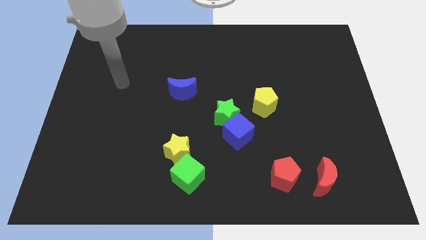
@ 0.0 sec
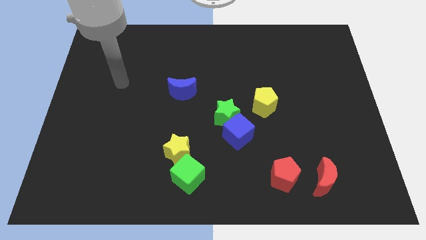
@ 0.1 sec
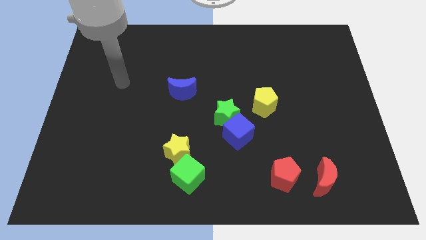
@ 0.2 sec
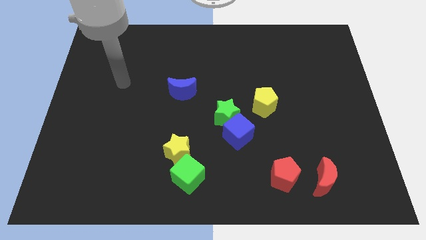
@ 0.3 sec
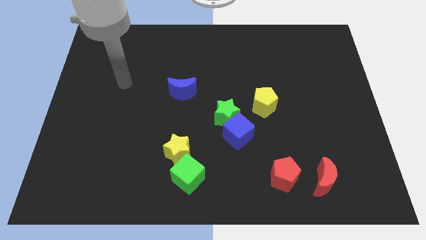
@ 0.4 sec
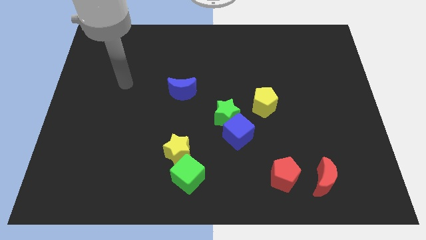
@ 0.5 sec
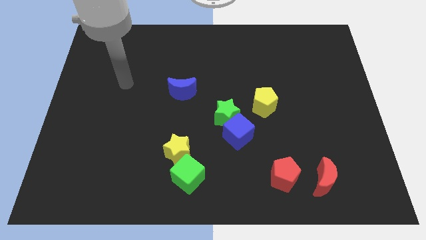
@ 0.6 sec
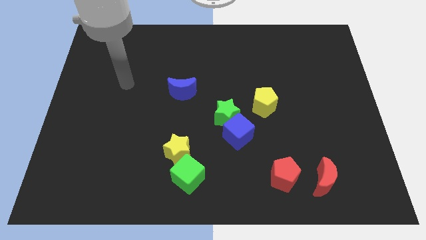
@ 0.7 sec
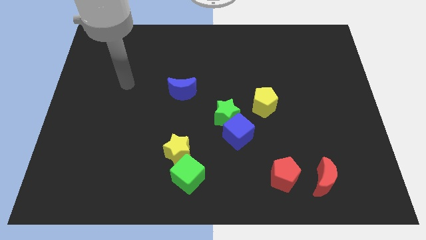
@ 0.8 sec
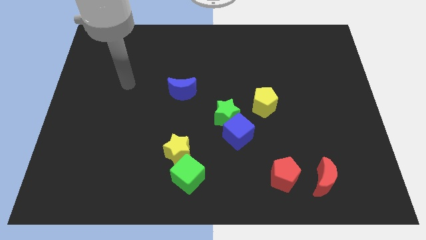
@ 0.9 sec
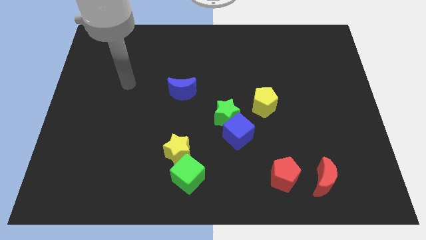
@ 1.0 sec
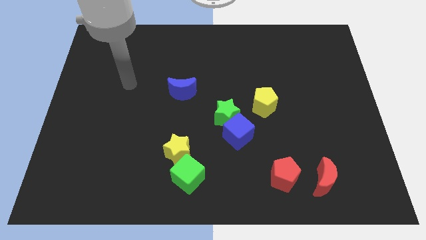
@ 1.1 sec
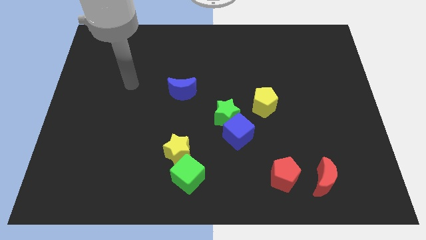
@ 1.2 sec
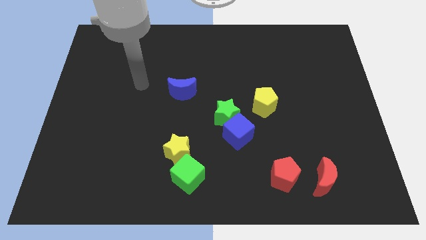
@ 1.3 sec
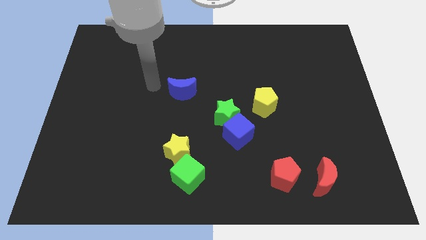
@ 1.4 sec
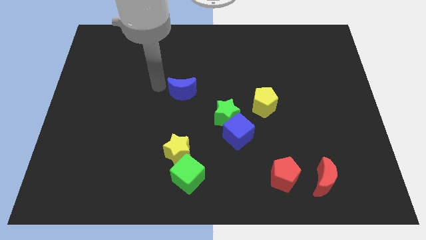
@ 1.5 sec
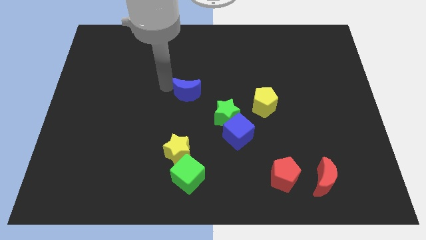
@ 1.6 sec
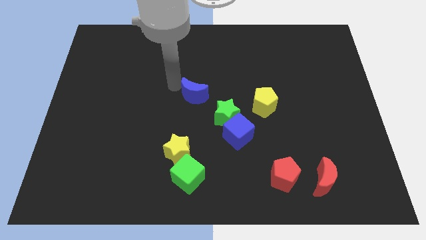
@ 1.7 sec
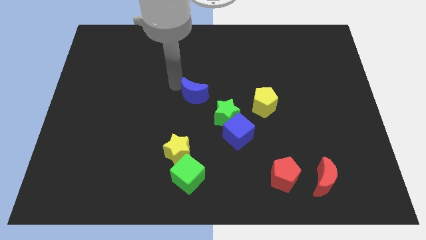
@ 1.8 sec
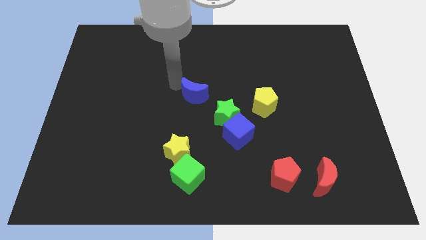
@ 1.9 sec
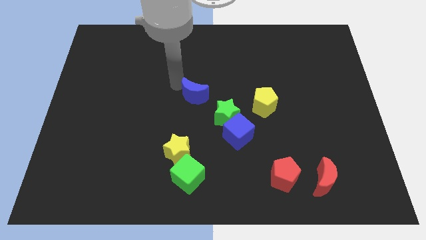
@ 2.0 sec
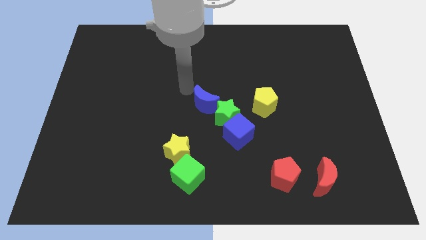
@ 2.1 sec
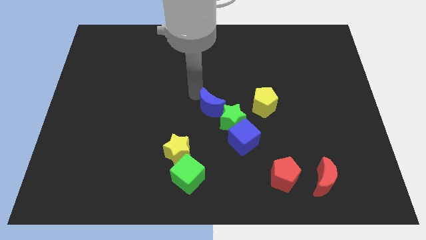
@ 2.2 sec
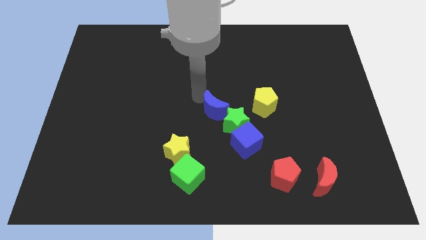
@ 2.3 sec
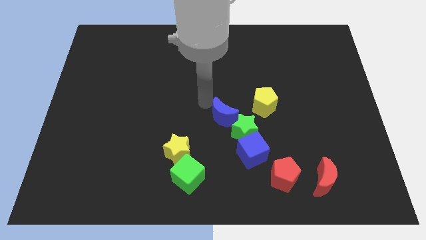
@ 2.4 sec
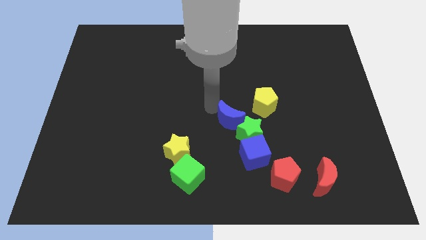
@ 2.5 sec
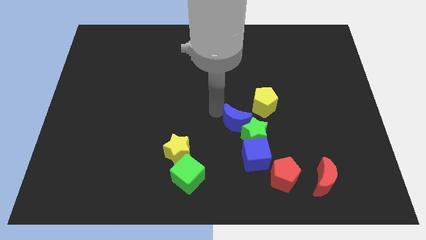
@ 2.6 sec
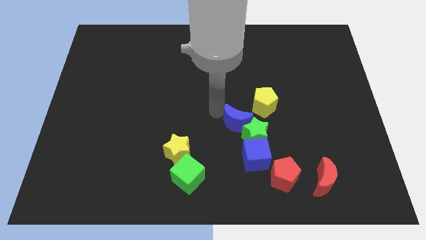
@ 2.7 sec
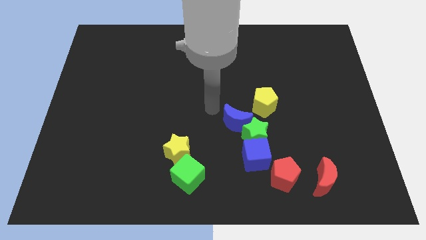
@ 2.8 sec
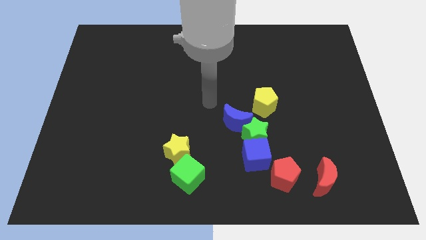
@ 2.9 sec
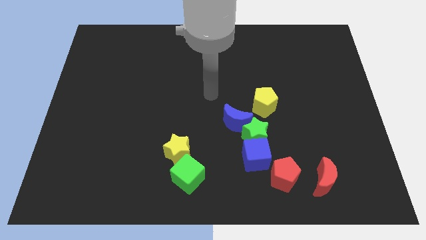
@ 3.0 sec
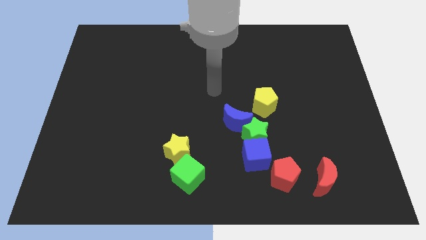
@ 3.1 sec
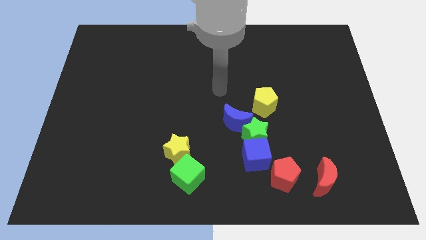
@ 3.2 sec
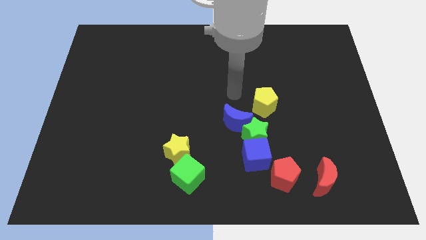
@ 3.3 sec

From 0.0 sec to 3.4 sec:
push green star and blue block with blue crescent

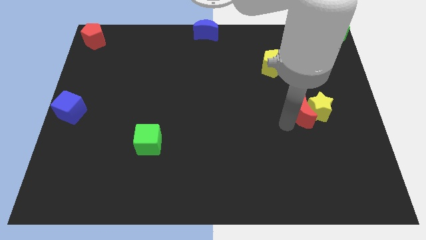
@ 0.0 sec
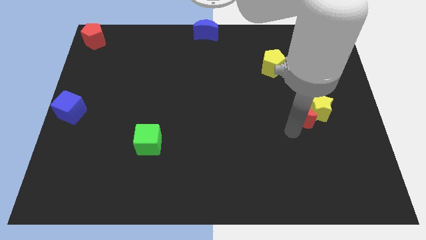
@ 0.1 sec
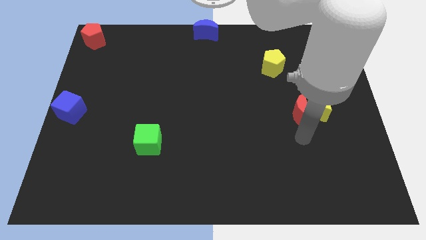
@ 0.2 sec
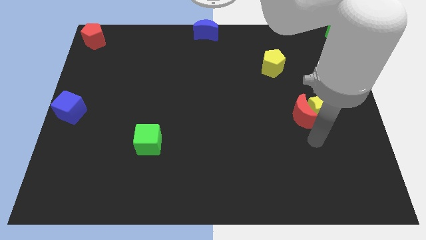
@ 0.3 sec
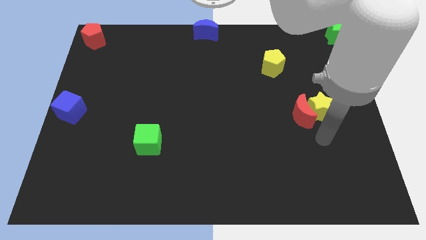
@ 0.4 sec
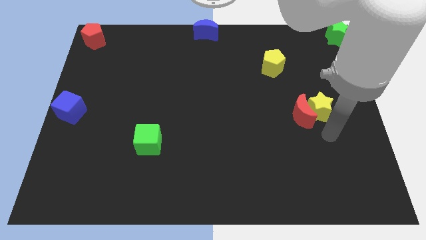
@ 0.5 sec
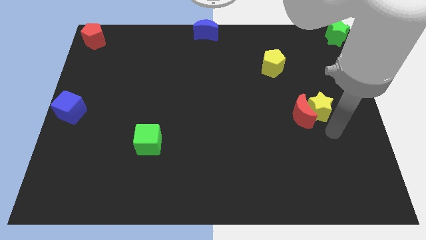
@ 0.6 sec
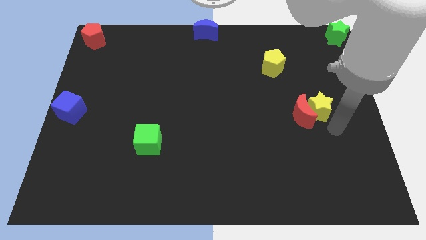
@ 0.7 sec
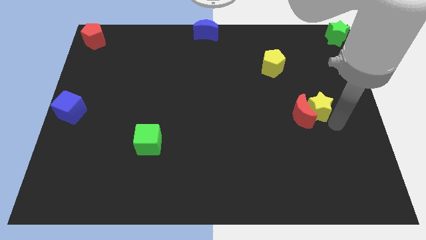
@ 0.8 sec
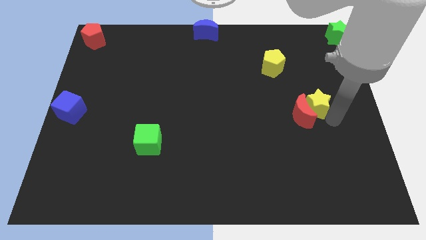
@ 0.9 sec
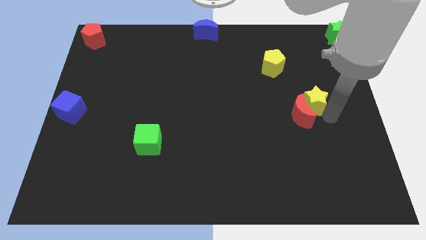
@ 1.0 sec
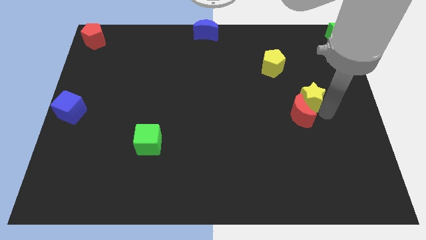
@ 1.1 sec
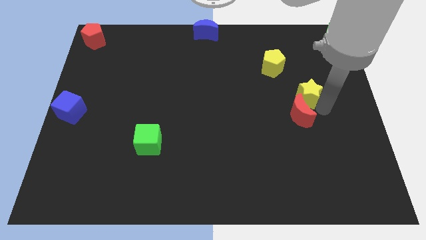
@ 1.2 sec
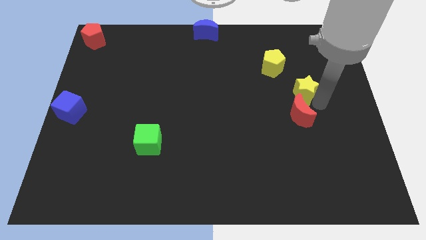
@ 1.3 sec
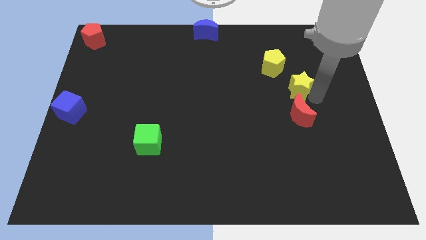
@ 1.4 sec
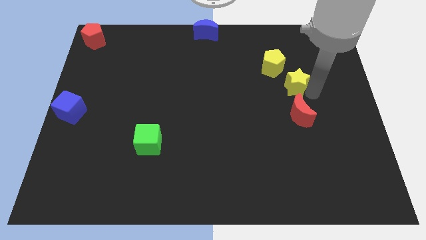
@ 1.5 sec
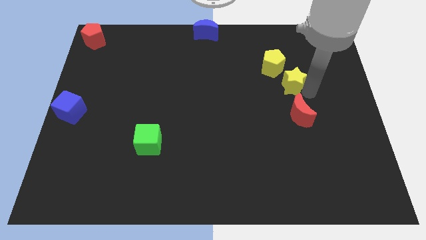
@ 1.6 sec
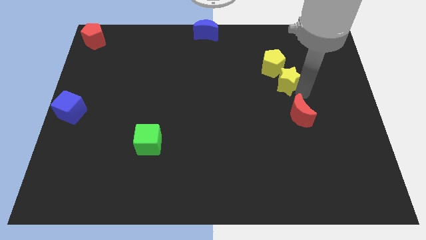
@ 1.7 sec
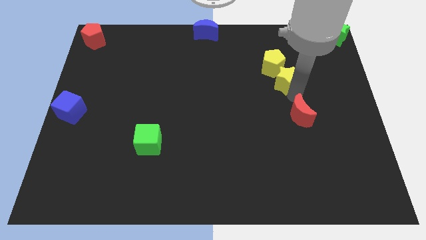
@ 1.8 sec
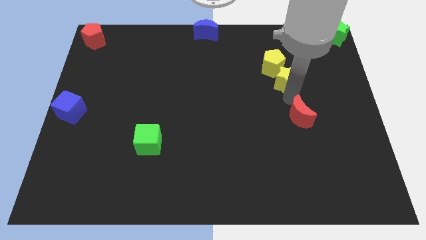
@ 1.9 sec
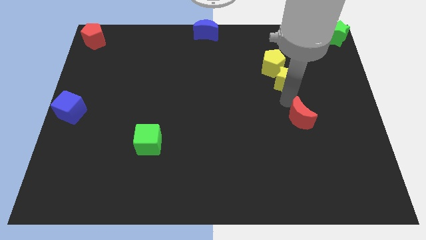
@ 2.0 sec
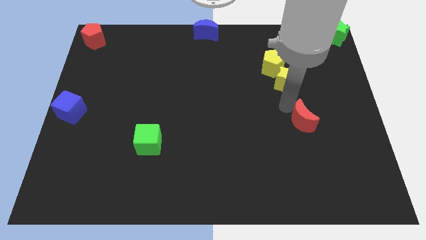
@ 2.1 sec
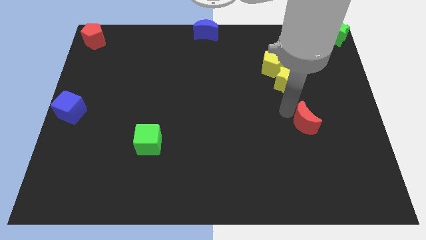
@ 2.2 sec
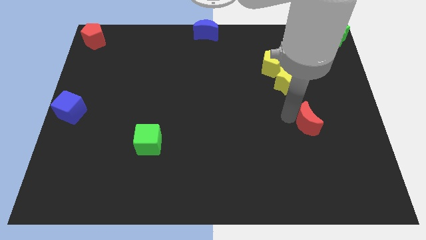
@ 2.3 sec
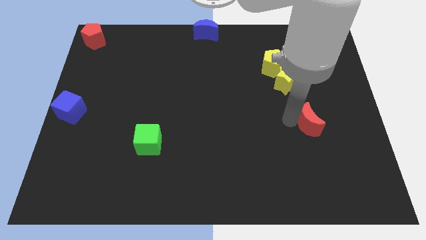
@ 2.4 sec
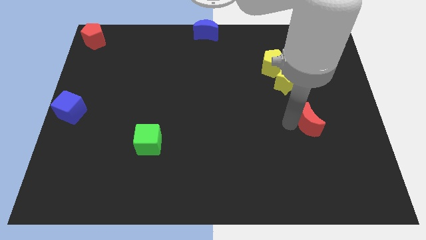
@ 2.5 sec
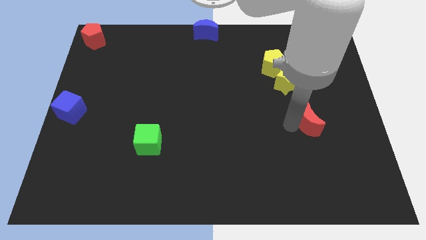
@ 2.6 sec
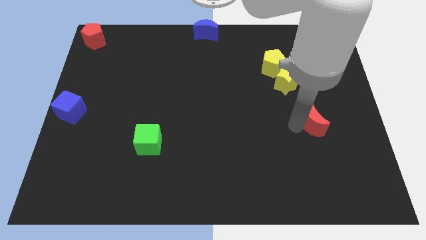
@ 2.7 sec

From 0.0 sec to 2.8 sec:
place the yellow star near the yellow pentagon

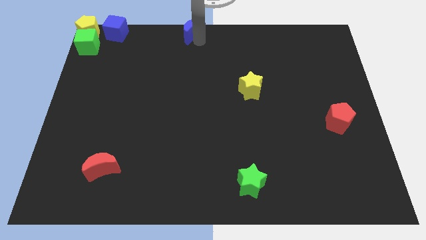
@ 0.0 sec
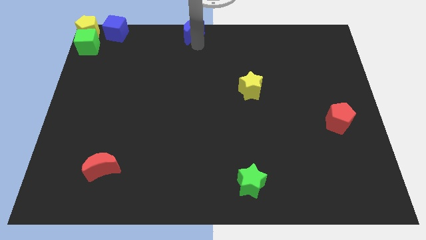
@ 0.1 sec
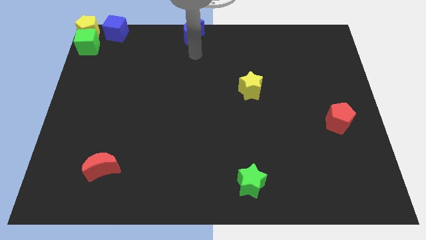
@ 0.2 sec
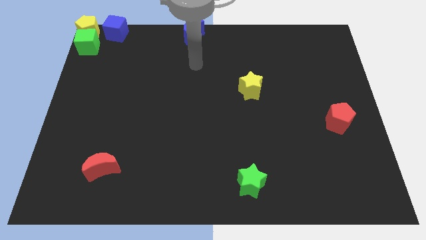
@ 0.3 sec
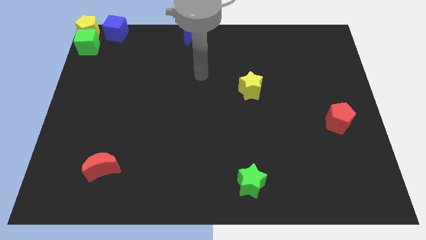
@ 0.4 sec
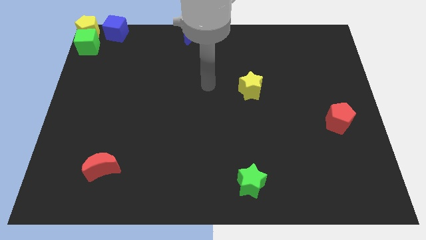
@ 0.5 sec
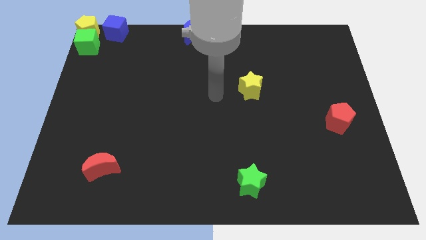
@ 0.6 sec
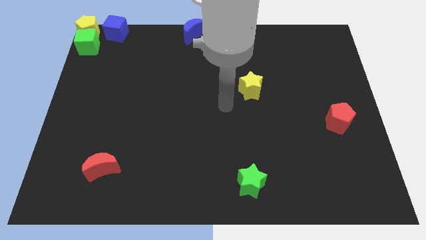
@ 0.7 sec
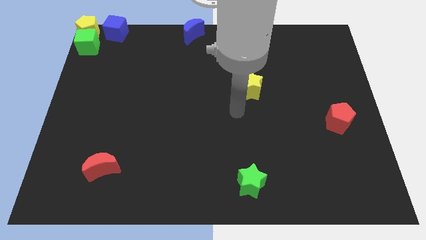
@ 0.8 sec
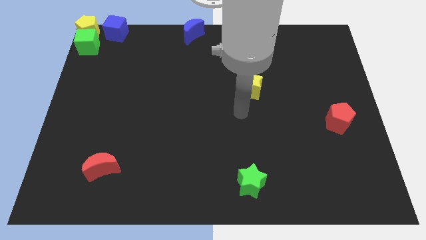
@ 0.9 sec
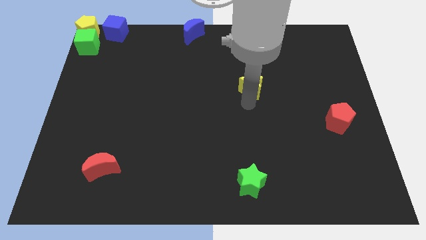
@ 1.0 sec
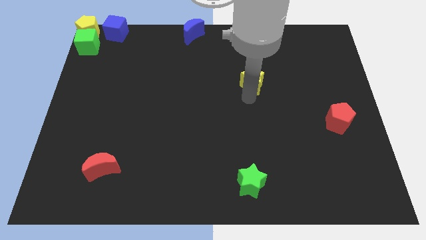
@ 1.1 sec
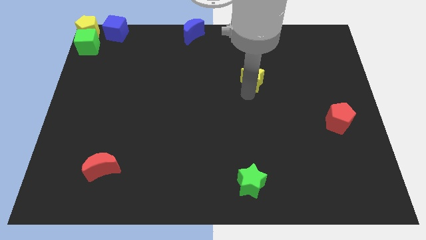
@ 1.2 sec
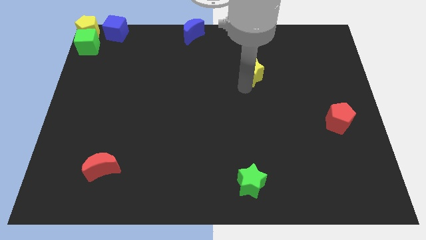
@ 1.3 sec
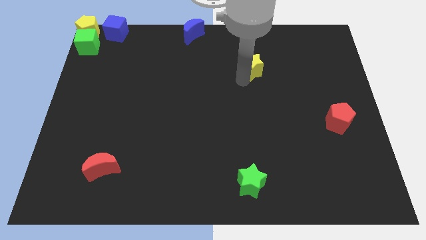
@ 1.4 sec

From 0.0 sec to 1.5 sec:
push the yellow star slightly to the top

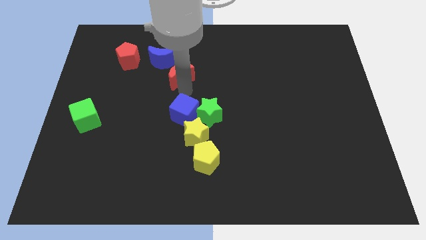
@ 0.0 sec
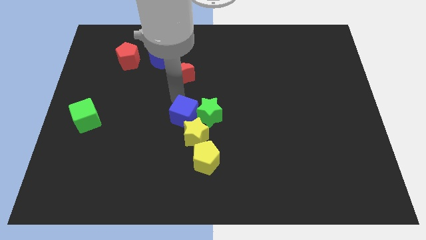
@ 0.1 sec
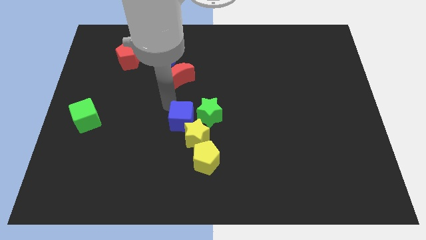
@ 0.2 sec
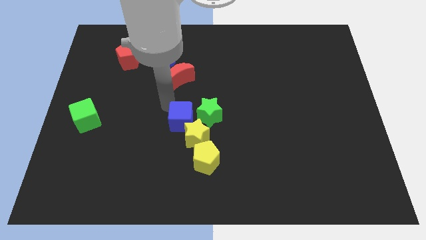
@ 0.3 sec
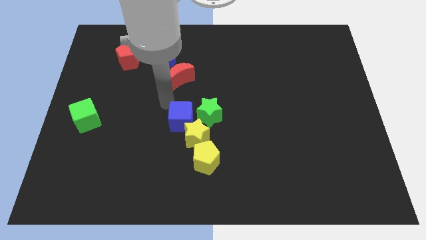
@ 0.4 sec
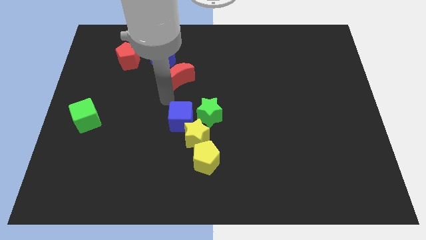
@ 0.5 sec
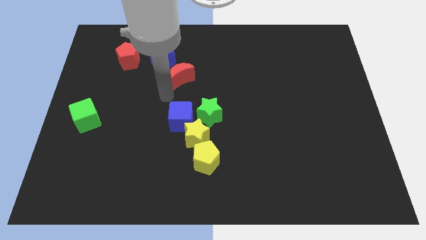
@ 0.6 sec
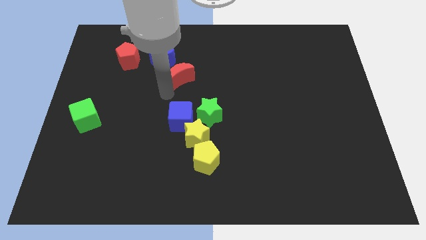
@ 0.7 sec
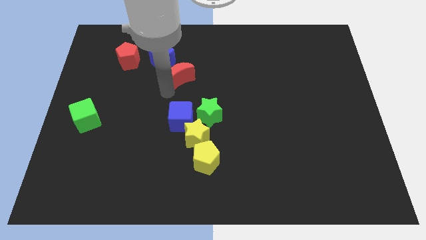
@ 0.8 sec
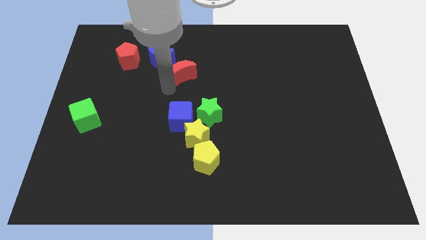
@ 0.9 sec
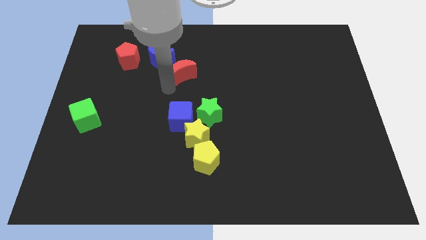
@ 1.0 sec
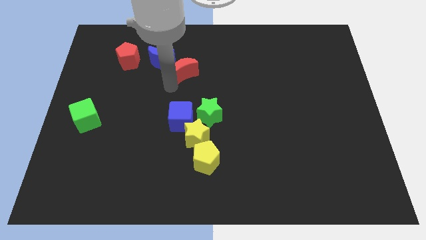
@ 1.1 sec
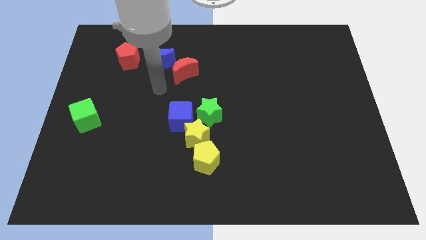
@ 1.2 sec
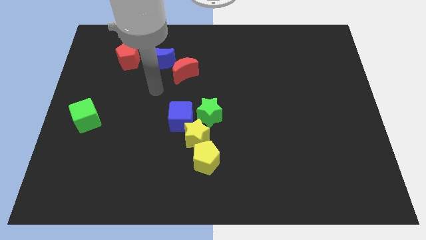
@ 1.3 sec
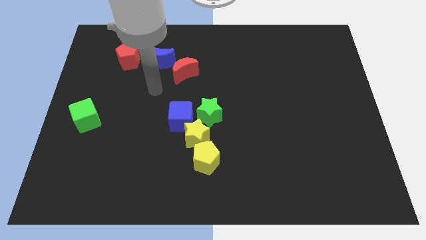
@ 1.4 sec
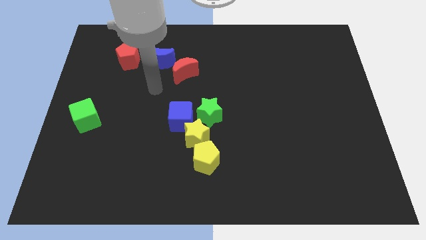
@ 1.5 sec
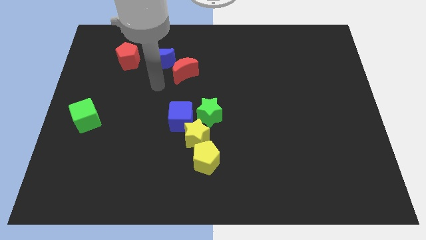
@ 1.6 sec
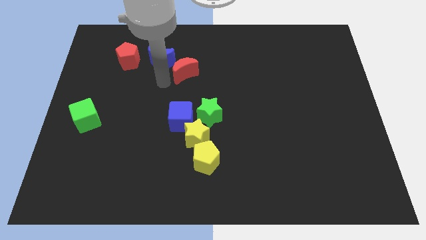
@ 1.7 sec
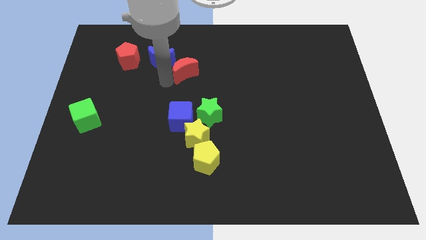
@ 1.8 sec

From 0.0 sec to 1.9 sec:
adjust both the red crescent and blue cube vertical to each other
